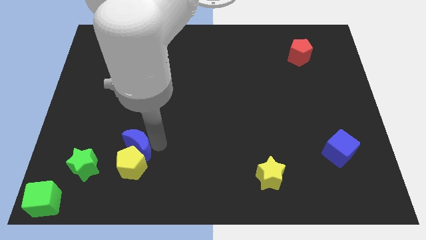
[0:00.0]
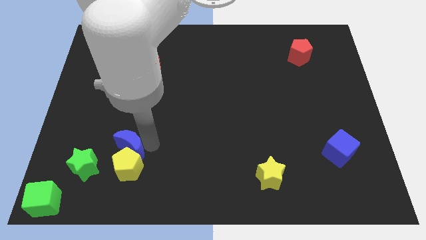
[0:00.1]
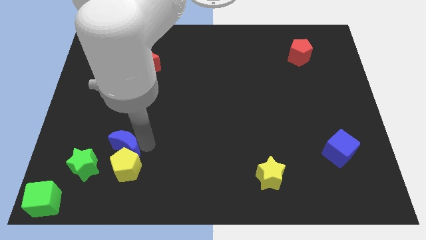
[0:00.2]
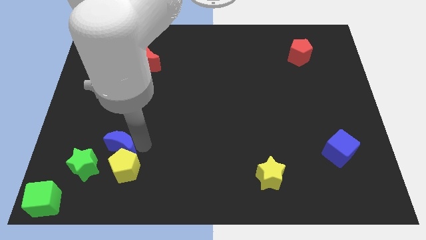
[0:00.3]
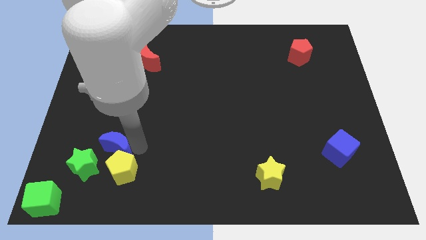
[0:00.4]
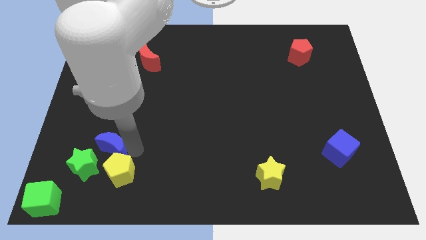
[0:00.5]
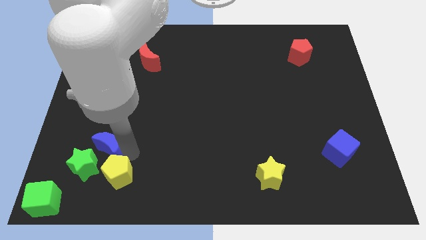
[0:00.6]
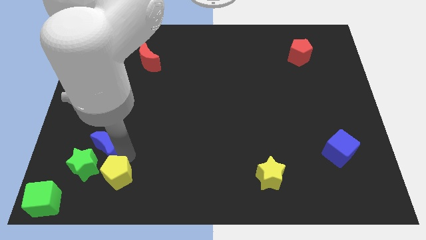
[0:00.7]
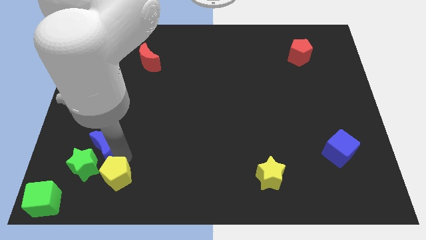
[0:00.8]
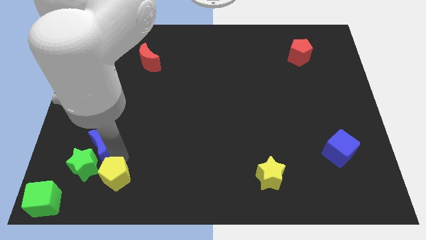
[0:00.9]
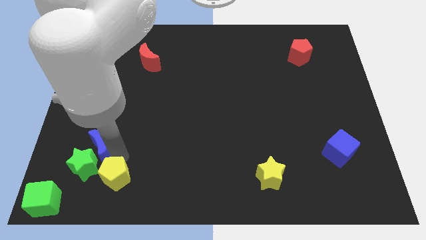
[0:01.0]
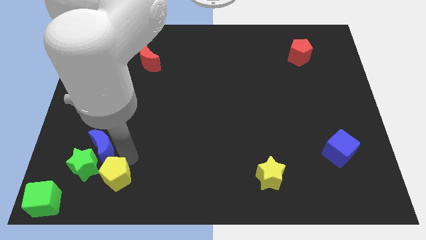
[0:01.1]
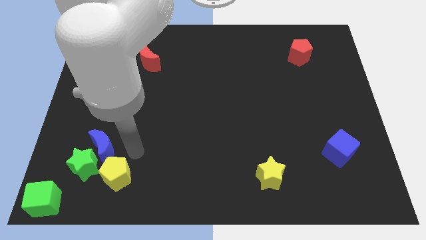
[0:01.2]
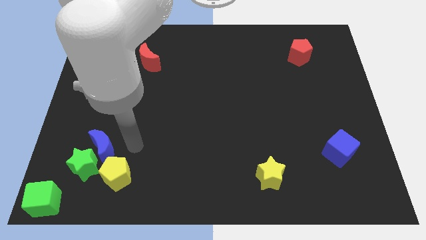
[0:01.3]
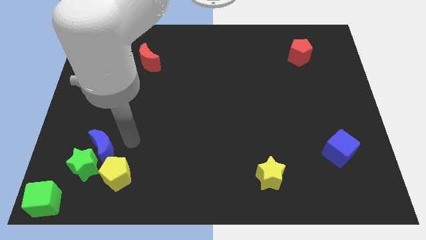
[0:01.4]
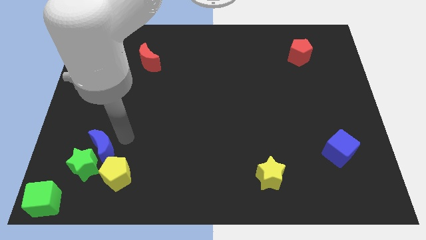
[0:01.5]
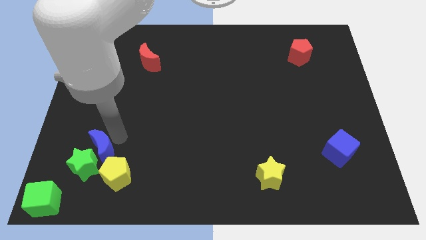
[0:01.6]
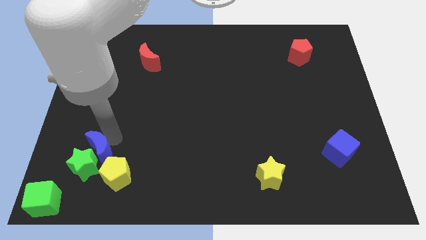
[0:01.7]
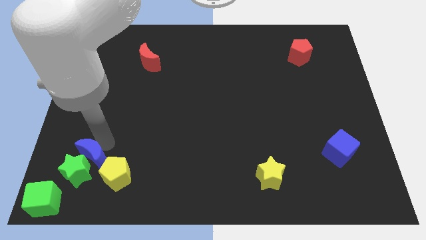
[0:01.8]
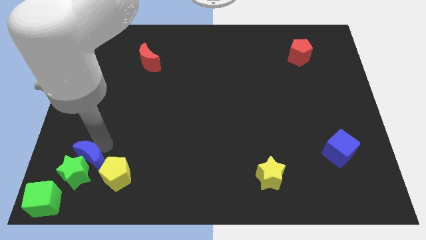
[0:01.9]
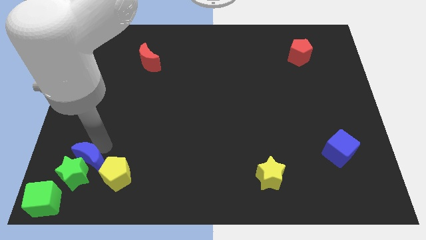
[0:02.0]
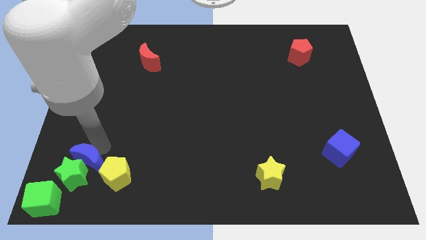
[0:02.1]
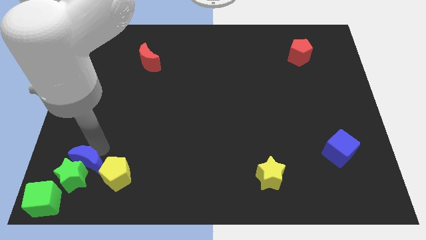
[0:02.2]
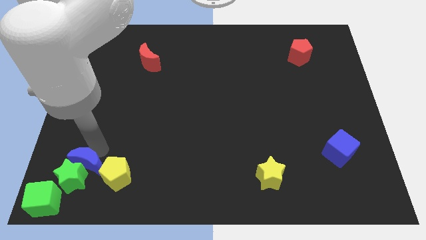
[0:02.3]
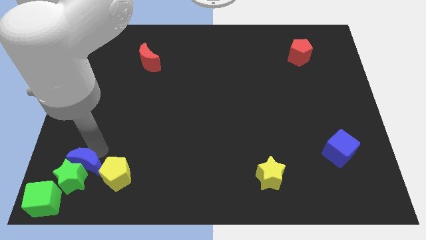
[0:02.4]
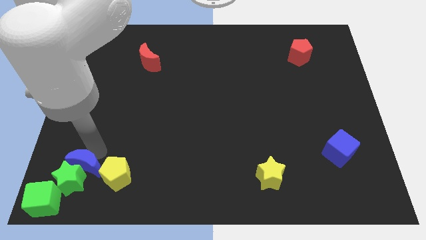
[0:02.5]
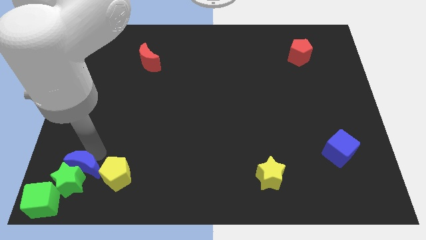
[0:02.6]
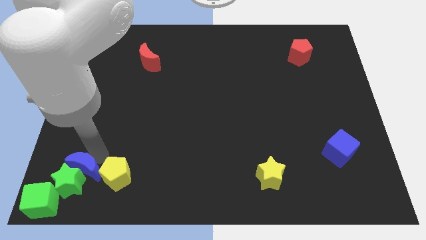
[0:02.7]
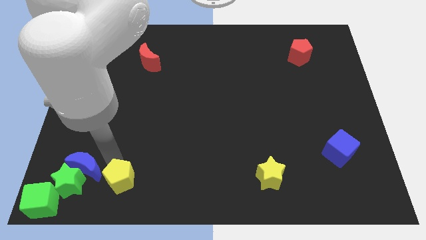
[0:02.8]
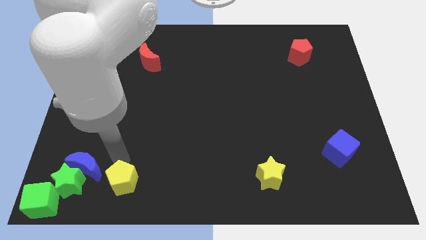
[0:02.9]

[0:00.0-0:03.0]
push the blue moon into green star

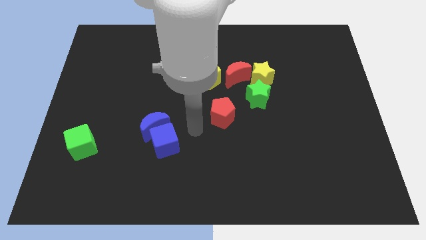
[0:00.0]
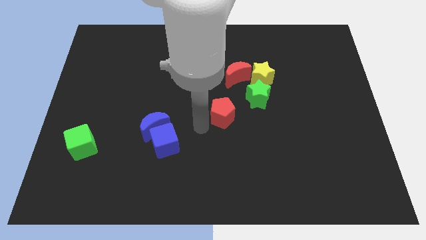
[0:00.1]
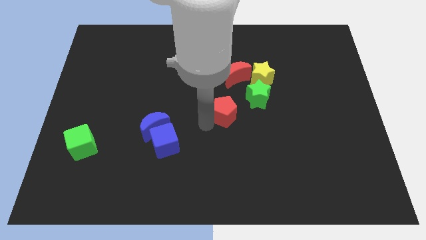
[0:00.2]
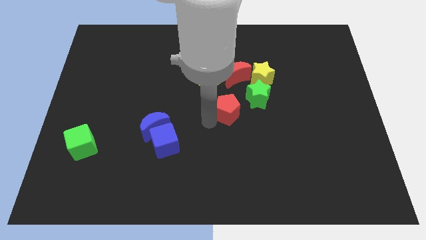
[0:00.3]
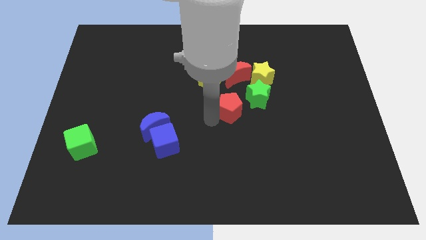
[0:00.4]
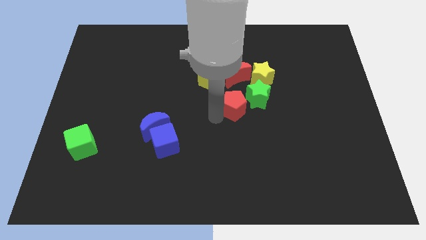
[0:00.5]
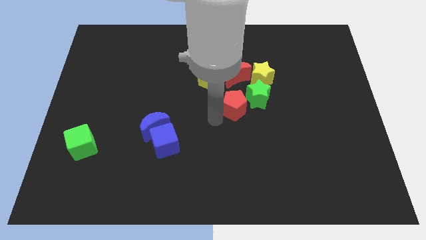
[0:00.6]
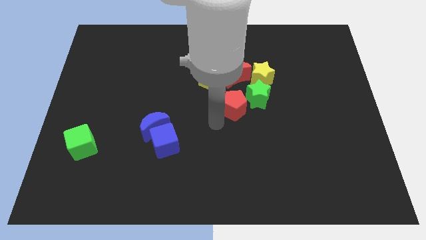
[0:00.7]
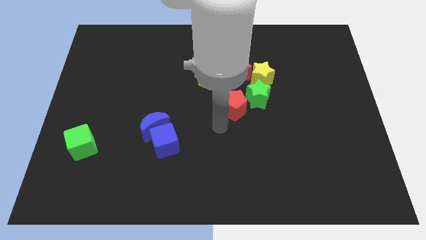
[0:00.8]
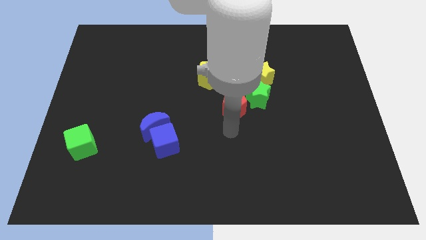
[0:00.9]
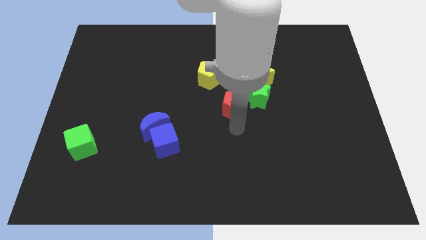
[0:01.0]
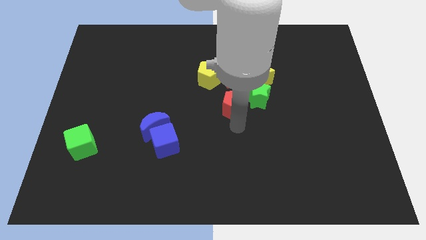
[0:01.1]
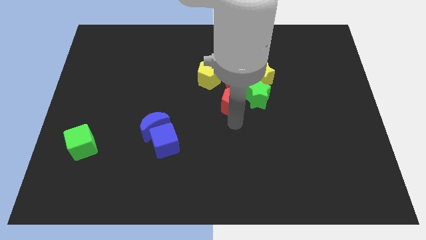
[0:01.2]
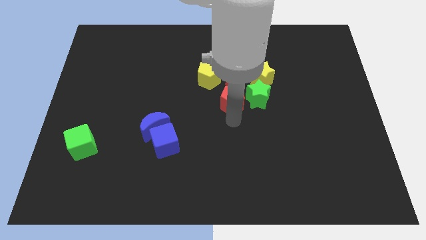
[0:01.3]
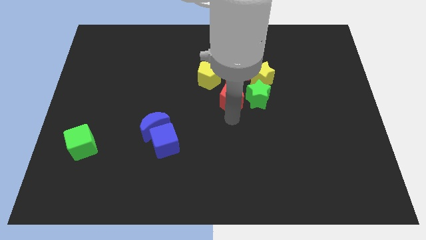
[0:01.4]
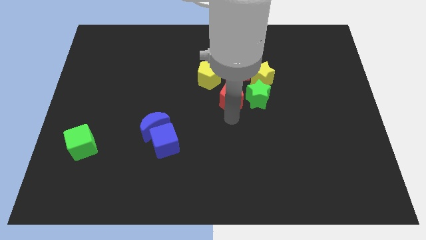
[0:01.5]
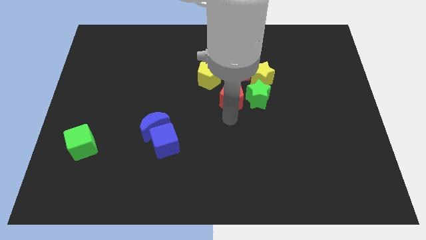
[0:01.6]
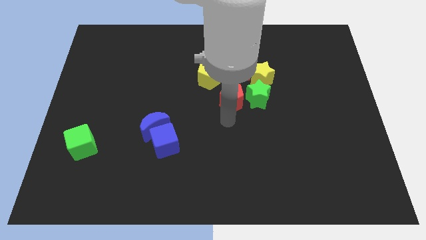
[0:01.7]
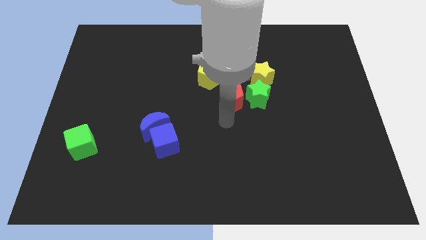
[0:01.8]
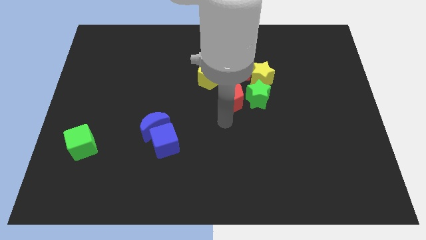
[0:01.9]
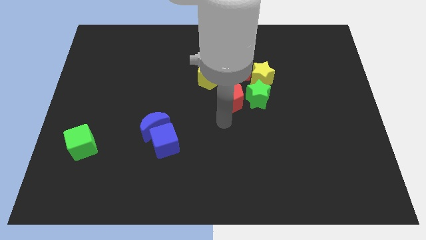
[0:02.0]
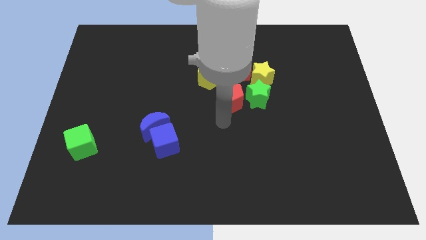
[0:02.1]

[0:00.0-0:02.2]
place the red pentagon left to the green star

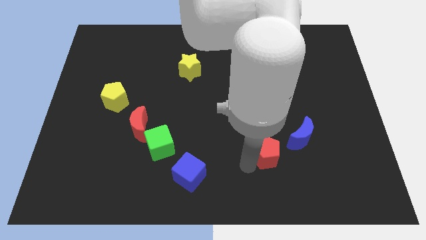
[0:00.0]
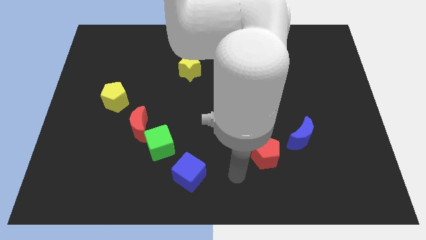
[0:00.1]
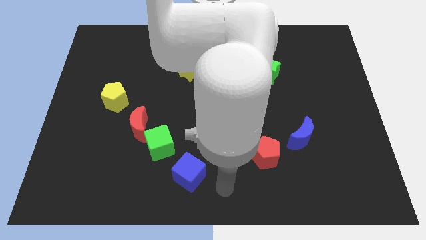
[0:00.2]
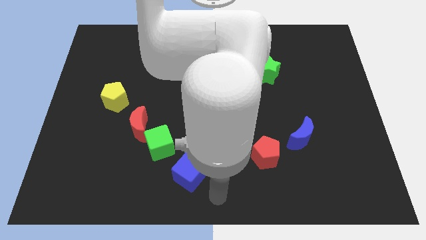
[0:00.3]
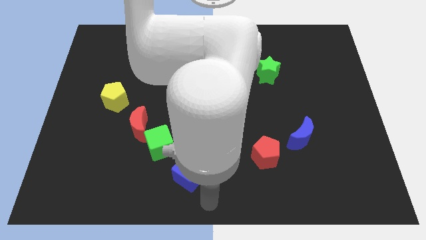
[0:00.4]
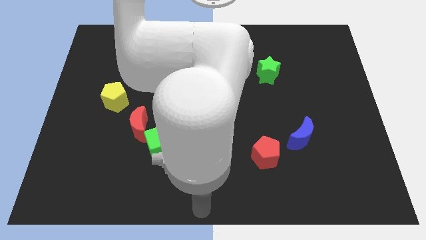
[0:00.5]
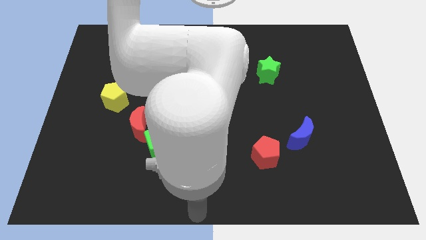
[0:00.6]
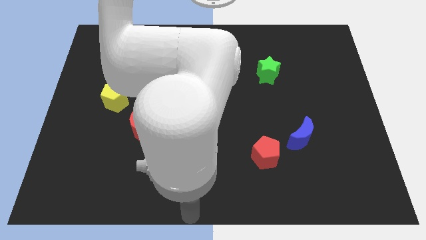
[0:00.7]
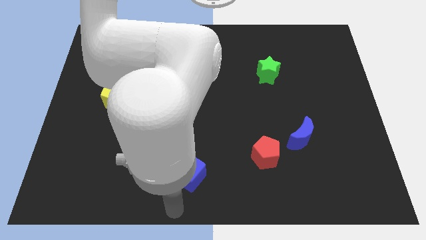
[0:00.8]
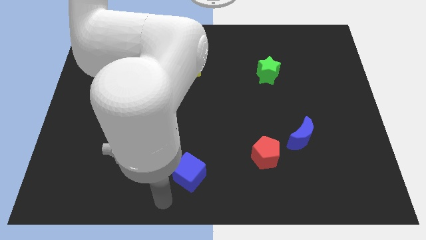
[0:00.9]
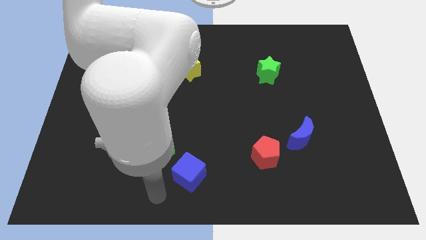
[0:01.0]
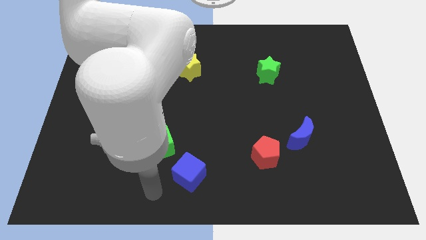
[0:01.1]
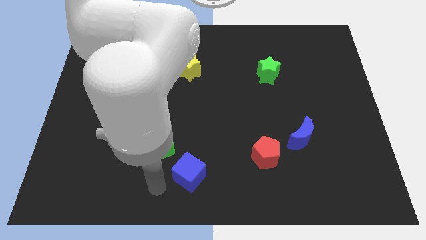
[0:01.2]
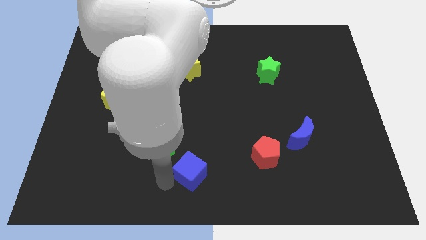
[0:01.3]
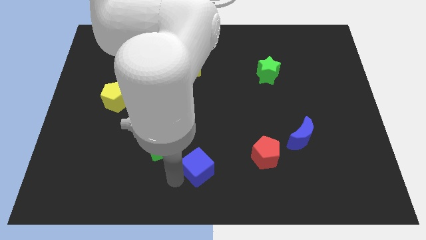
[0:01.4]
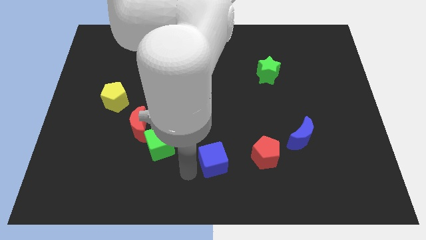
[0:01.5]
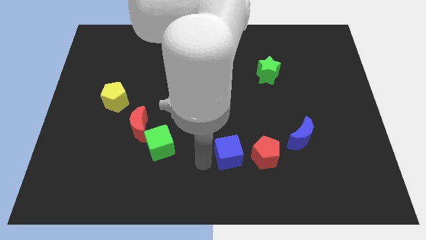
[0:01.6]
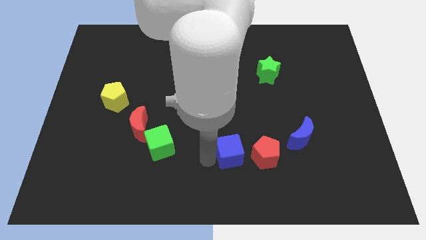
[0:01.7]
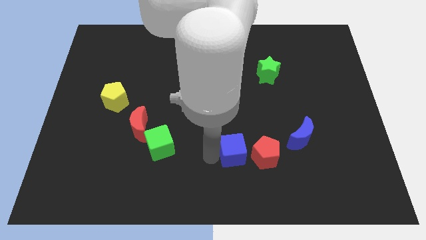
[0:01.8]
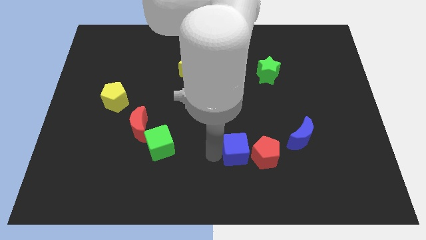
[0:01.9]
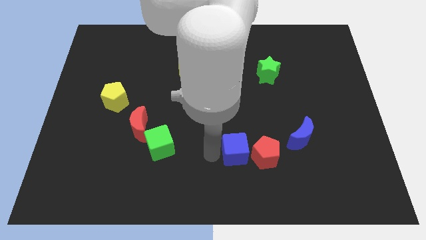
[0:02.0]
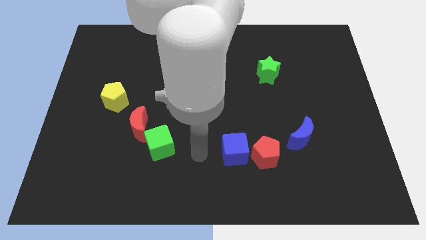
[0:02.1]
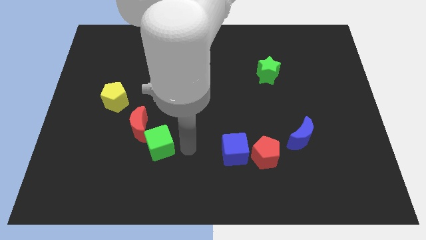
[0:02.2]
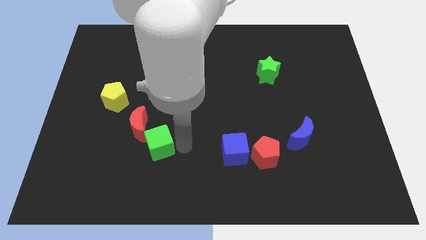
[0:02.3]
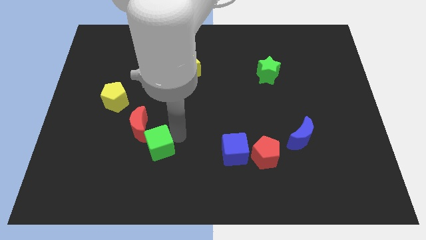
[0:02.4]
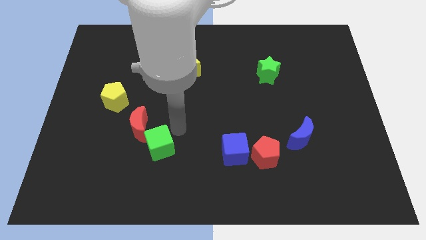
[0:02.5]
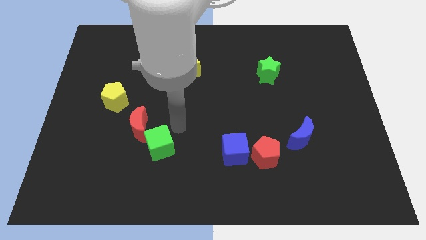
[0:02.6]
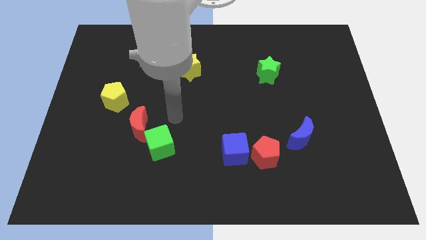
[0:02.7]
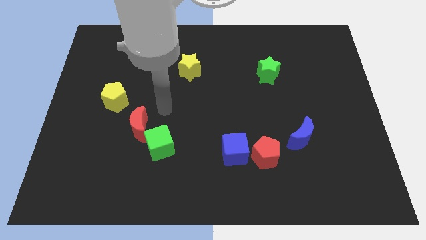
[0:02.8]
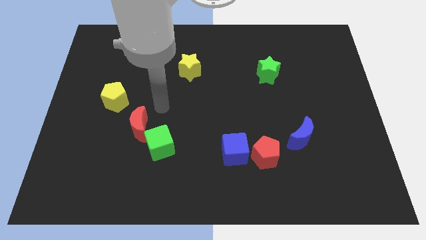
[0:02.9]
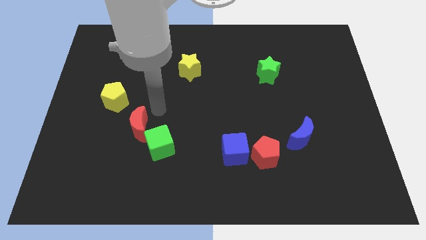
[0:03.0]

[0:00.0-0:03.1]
push the blue cube to the left of the red pentagon

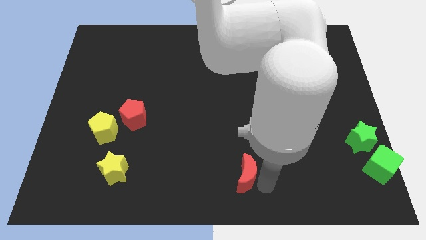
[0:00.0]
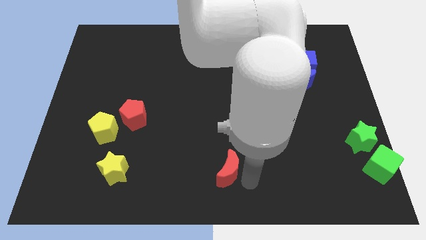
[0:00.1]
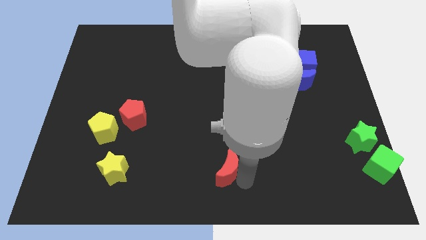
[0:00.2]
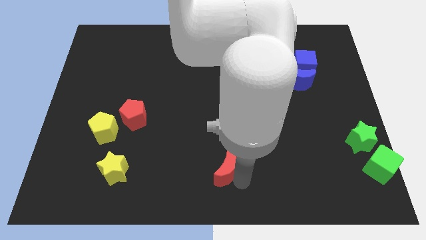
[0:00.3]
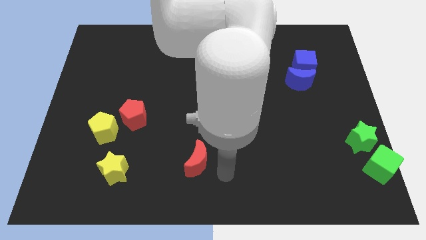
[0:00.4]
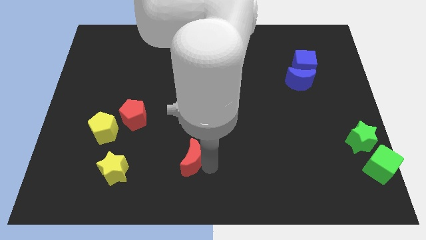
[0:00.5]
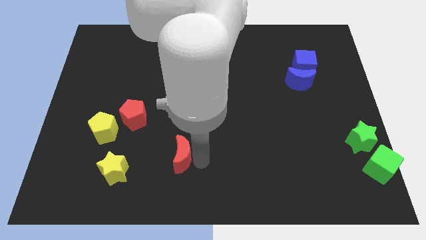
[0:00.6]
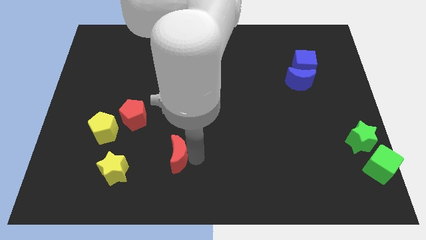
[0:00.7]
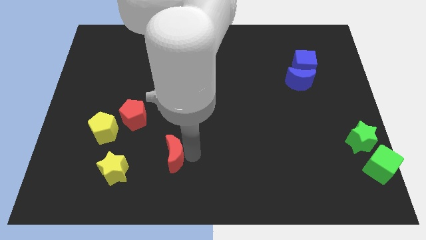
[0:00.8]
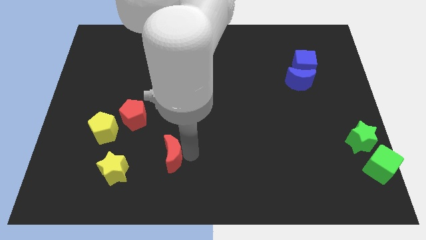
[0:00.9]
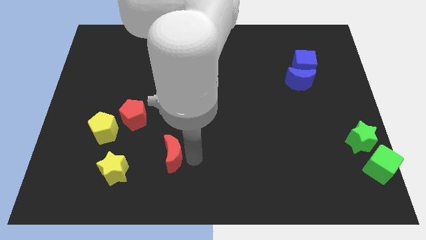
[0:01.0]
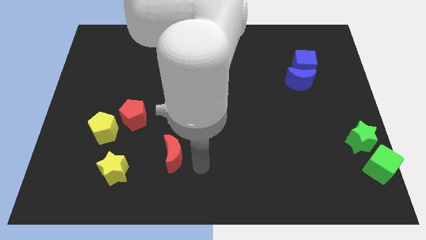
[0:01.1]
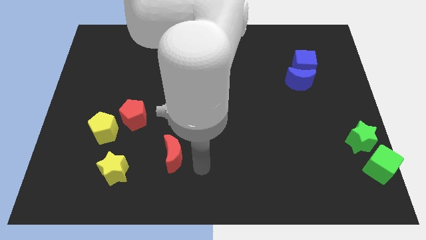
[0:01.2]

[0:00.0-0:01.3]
move the red crescent diagonal to the right of the yellow star
